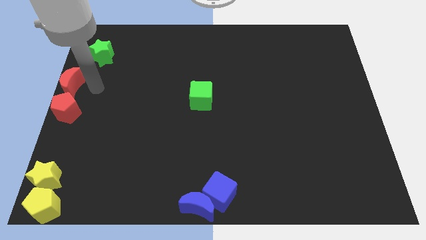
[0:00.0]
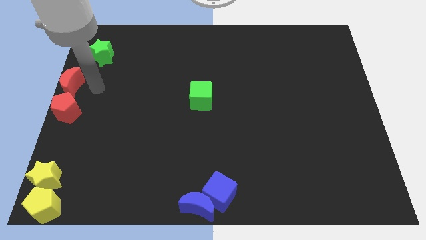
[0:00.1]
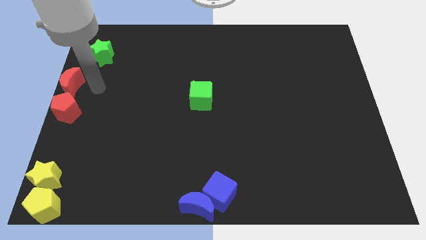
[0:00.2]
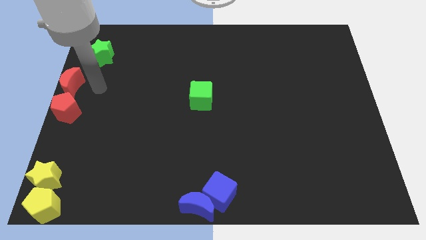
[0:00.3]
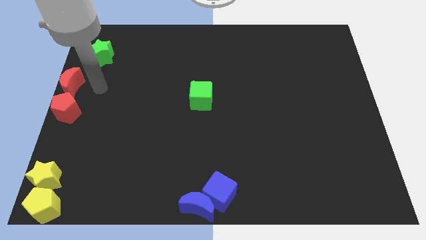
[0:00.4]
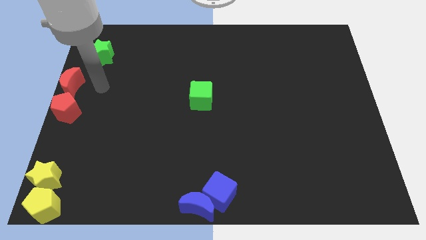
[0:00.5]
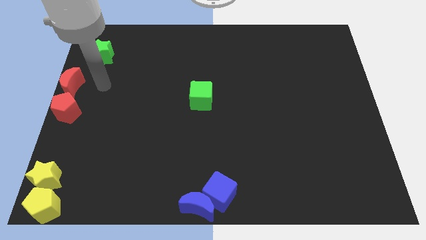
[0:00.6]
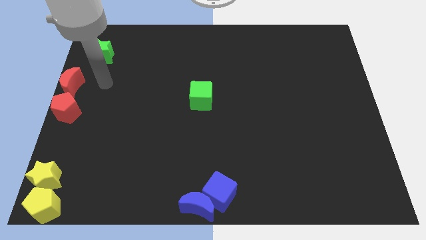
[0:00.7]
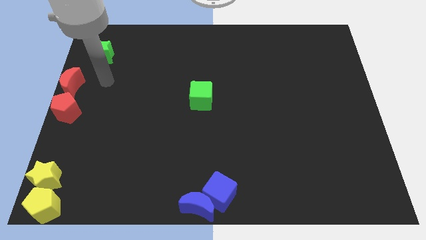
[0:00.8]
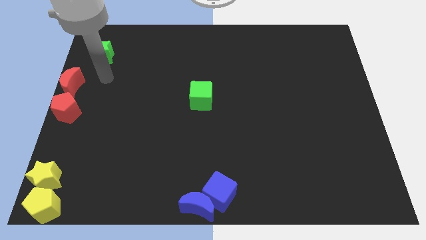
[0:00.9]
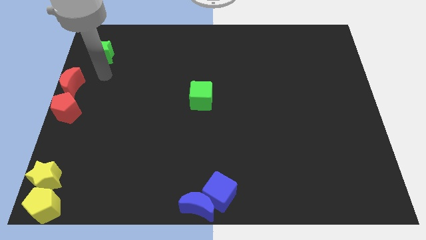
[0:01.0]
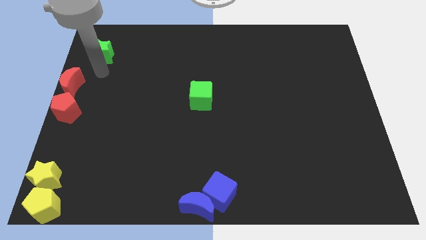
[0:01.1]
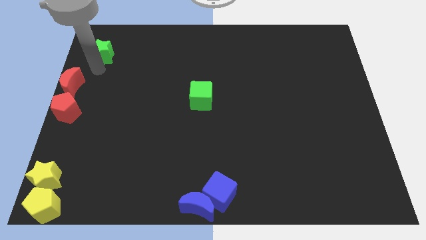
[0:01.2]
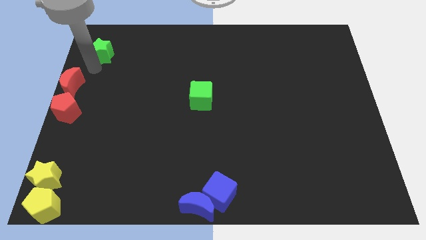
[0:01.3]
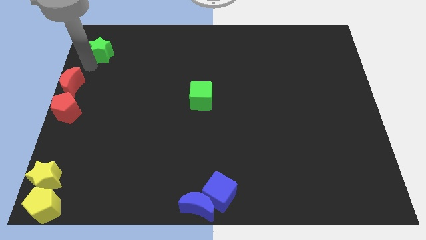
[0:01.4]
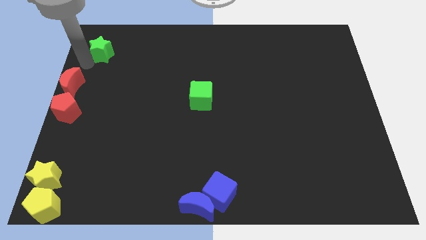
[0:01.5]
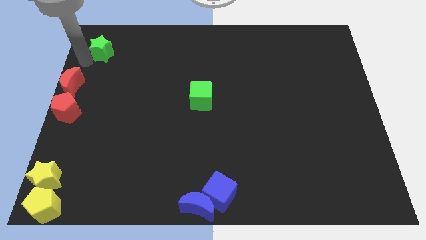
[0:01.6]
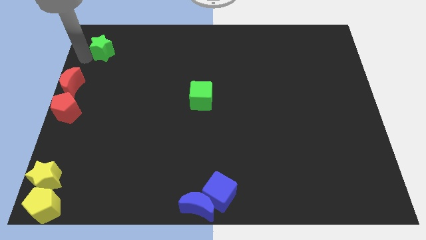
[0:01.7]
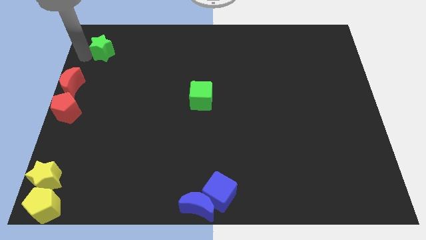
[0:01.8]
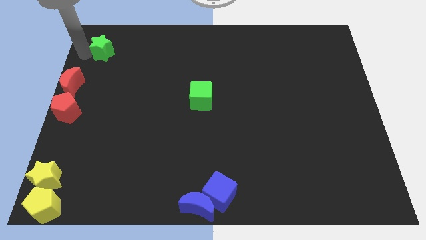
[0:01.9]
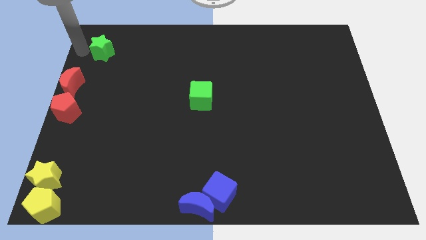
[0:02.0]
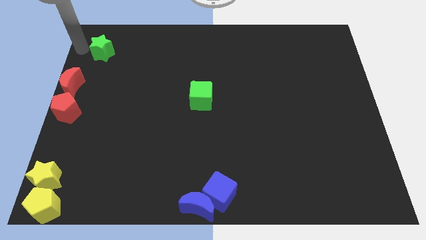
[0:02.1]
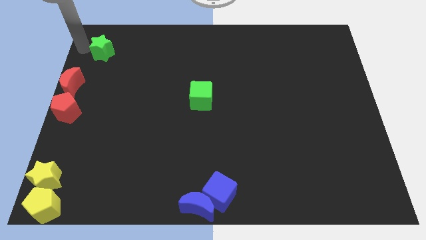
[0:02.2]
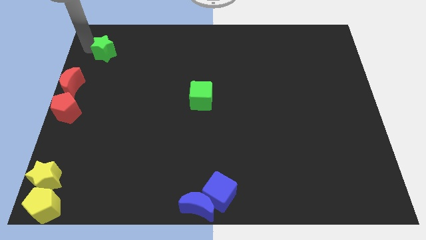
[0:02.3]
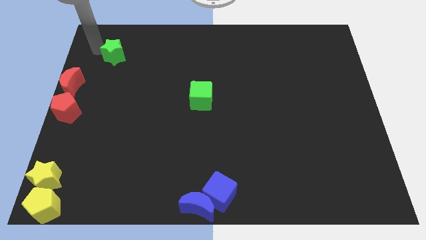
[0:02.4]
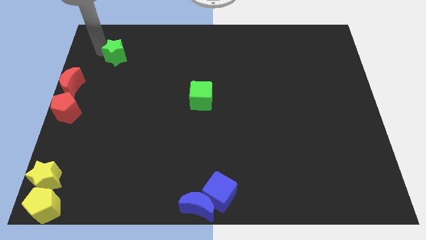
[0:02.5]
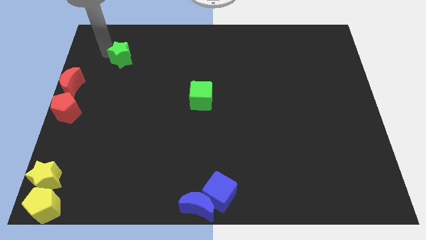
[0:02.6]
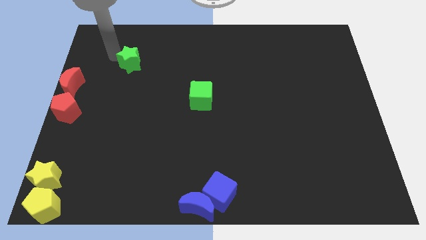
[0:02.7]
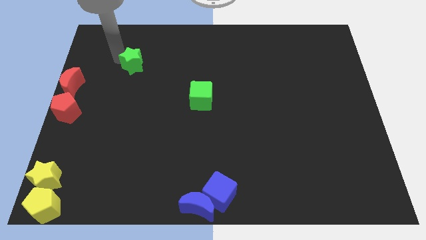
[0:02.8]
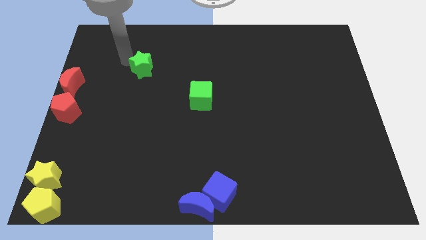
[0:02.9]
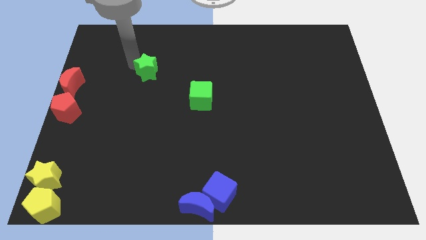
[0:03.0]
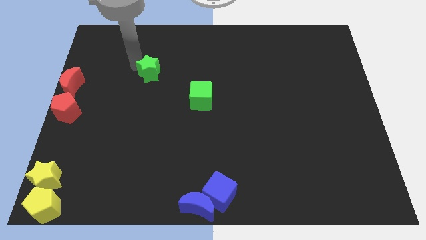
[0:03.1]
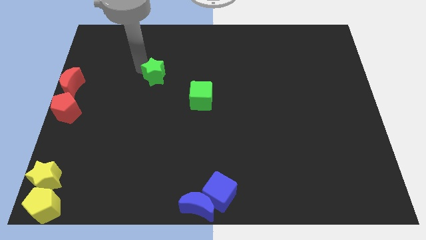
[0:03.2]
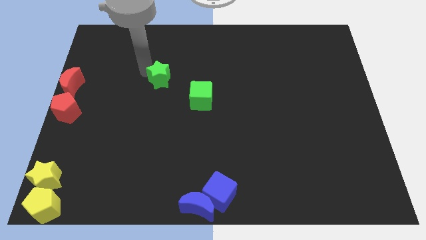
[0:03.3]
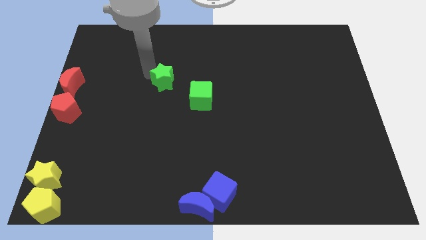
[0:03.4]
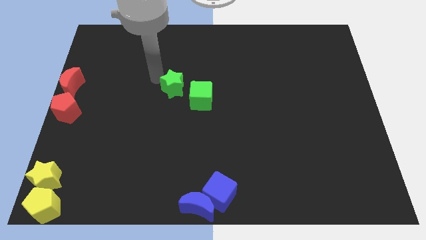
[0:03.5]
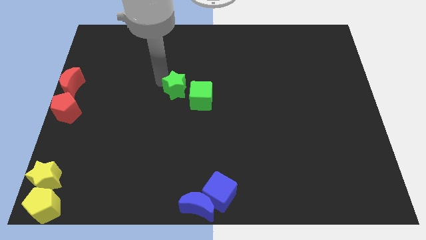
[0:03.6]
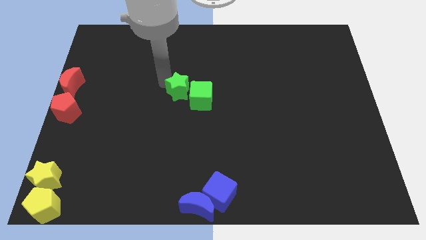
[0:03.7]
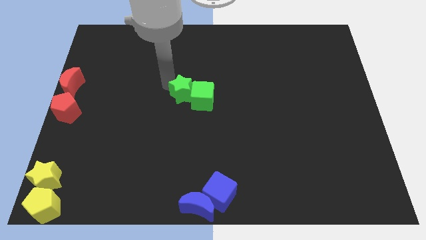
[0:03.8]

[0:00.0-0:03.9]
push the green star into the green cube

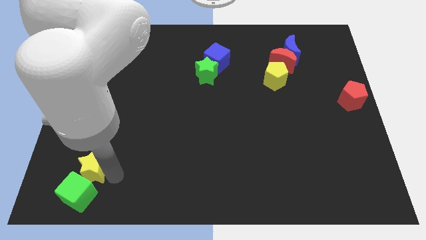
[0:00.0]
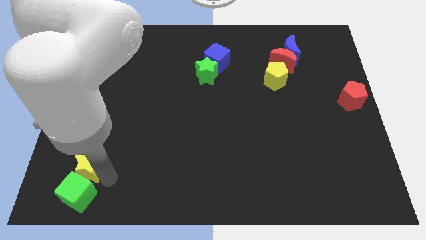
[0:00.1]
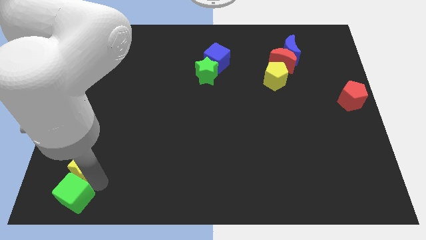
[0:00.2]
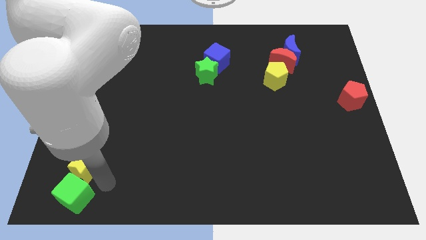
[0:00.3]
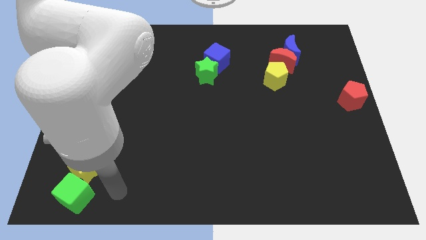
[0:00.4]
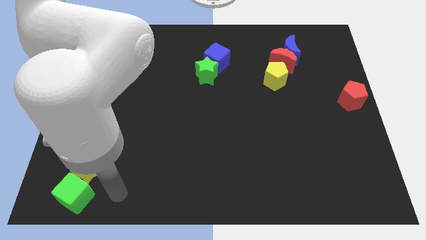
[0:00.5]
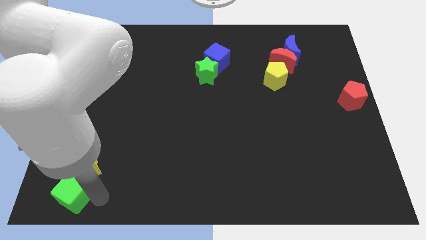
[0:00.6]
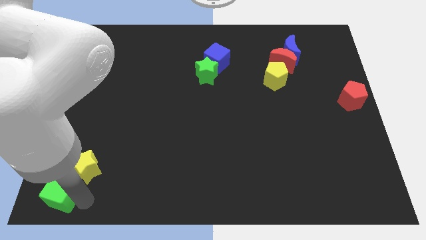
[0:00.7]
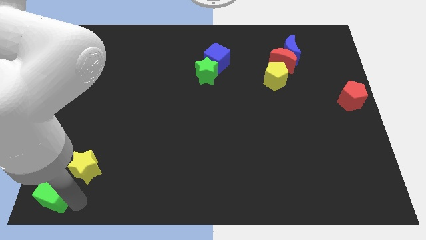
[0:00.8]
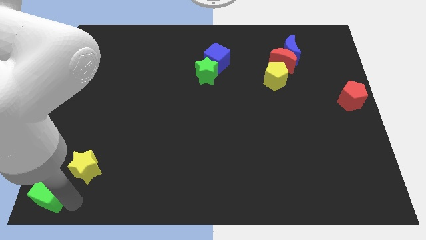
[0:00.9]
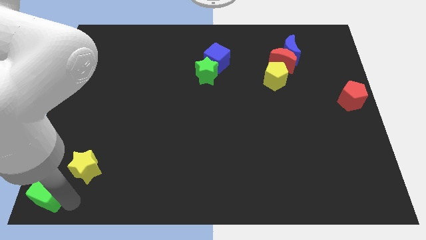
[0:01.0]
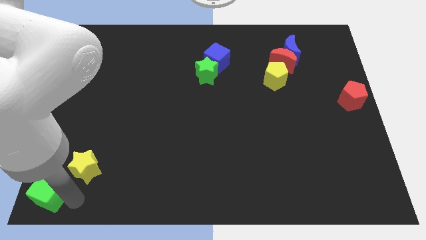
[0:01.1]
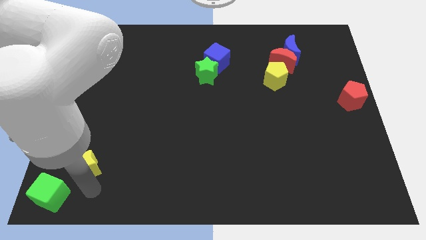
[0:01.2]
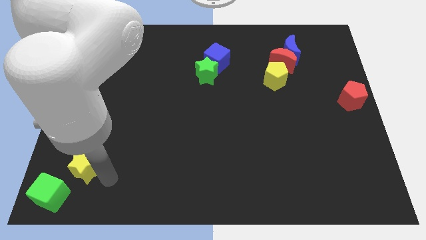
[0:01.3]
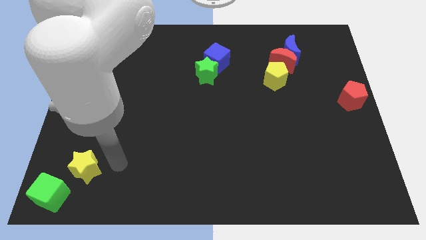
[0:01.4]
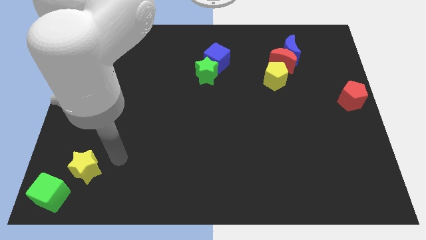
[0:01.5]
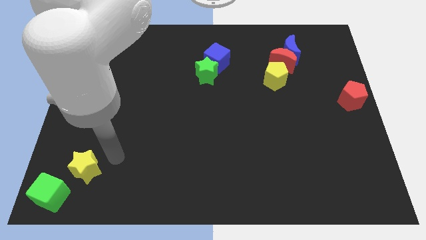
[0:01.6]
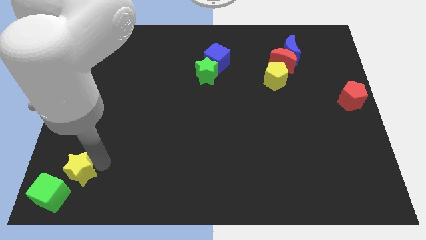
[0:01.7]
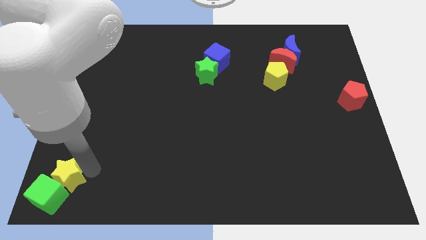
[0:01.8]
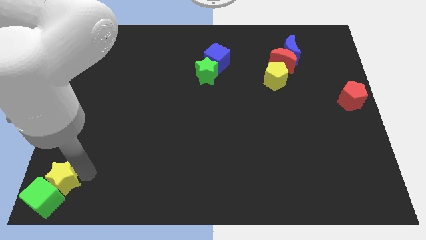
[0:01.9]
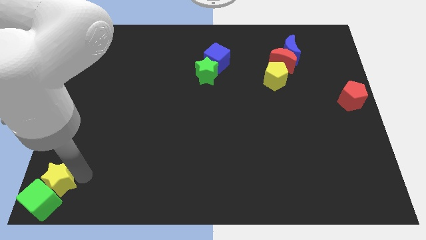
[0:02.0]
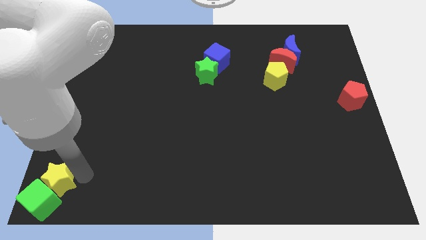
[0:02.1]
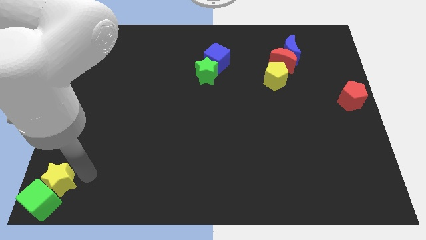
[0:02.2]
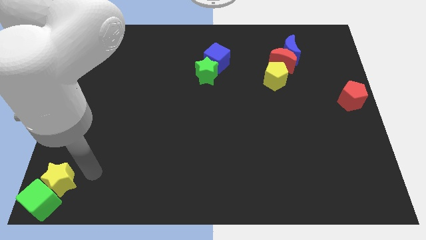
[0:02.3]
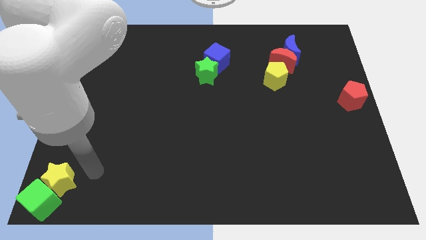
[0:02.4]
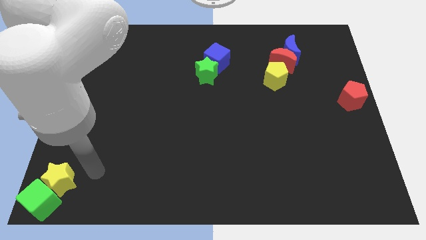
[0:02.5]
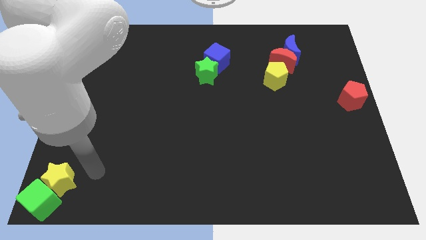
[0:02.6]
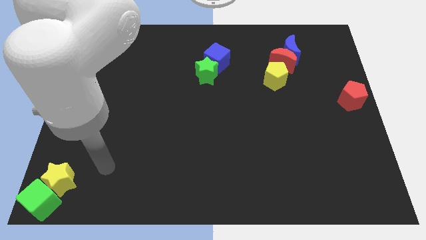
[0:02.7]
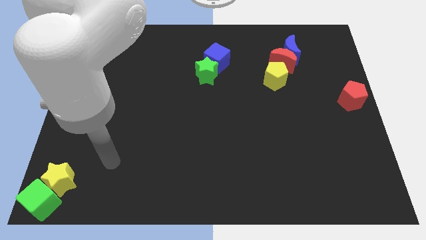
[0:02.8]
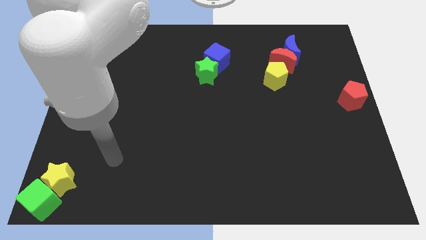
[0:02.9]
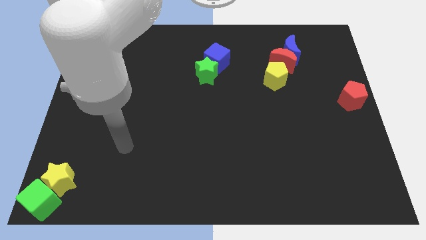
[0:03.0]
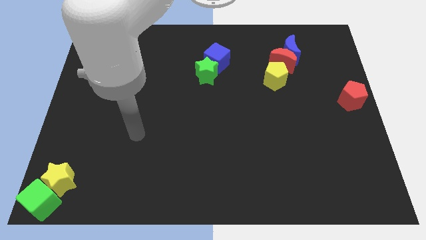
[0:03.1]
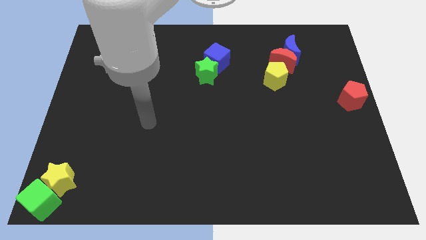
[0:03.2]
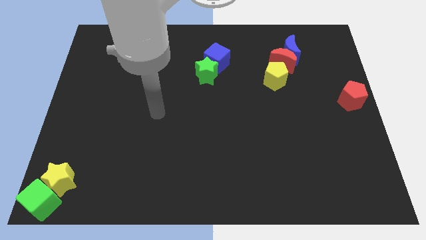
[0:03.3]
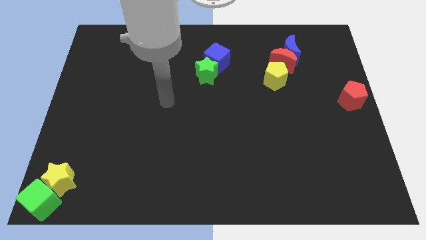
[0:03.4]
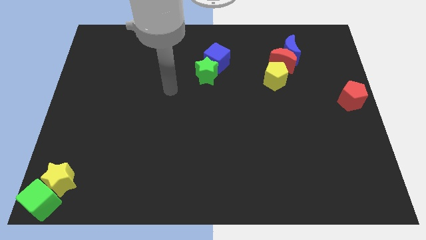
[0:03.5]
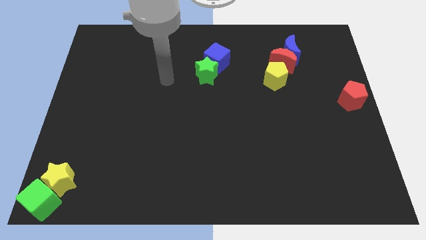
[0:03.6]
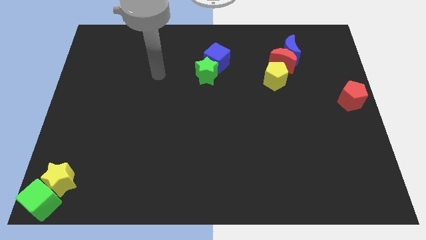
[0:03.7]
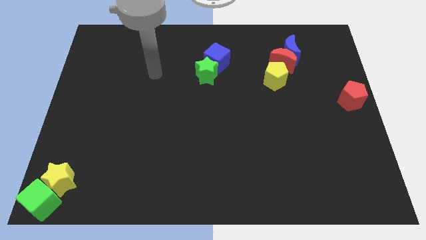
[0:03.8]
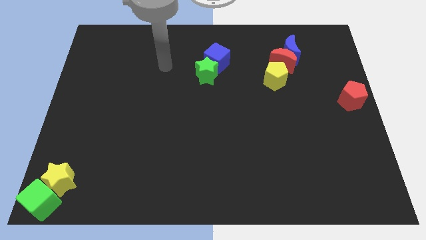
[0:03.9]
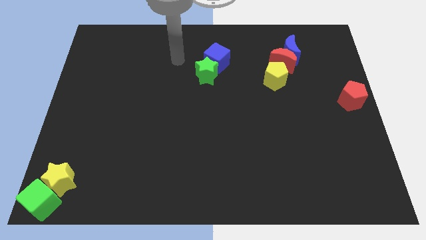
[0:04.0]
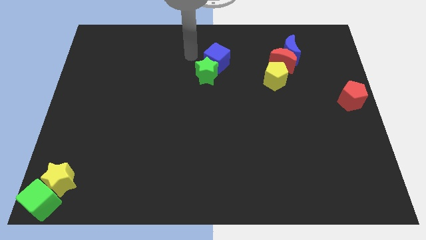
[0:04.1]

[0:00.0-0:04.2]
place the yellow star diagonal to the green cube

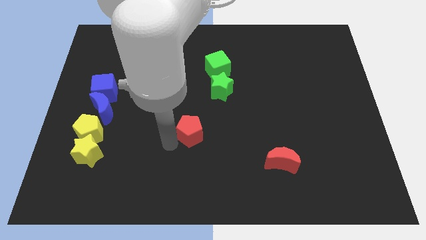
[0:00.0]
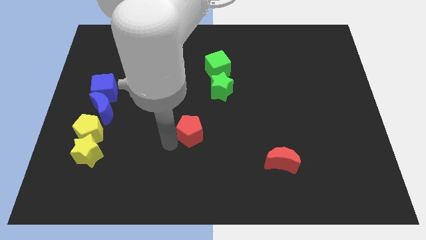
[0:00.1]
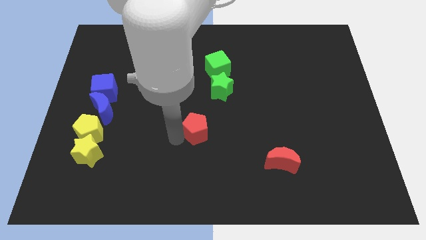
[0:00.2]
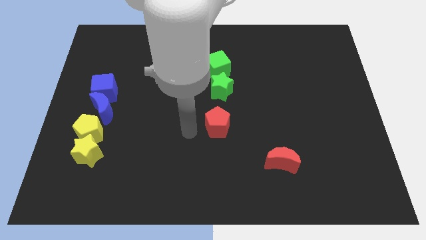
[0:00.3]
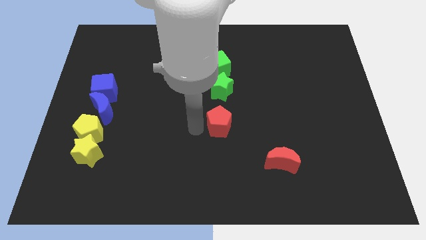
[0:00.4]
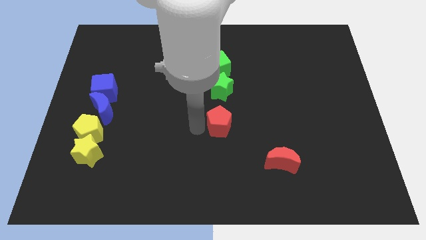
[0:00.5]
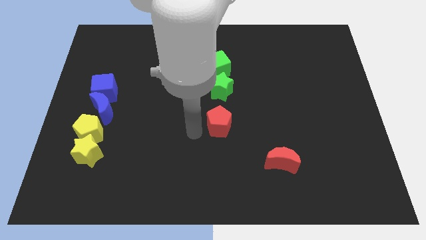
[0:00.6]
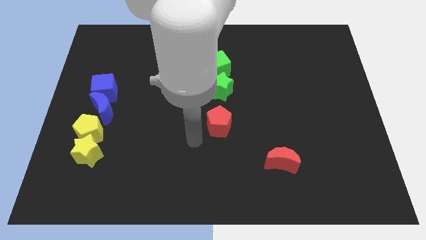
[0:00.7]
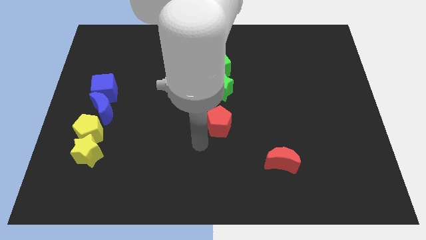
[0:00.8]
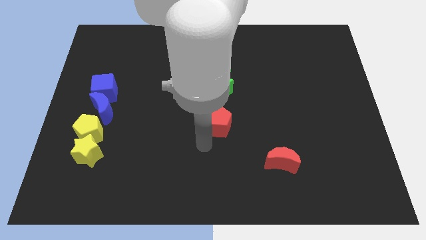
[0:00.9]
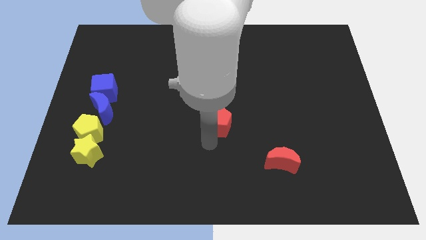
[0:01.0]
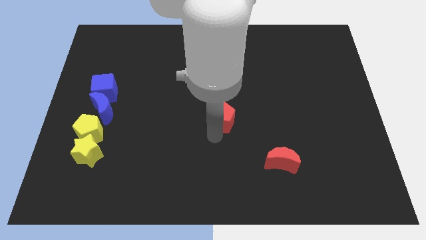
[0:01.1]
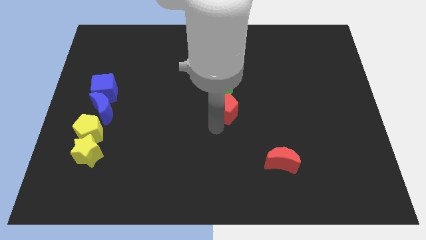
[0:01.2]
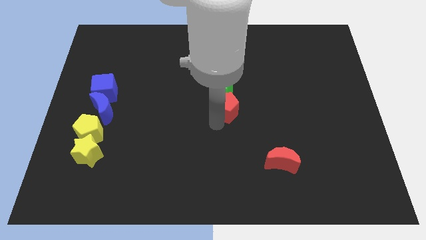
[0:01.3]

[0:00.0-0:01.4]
move the red pentagon below the green star
